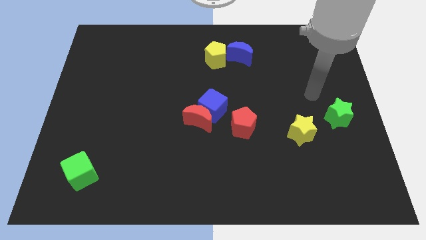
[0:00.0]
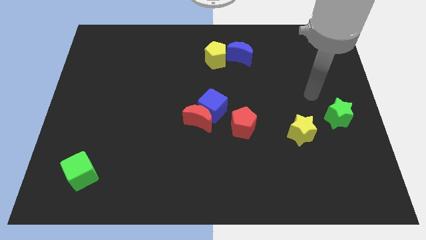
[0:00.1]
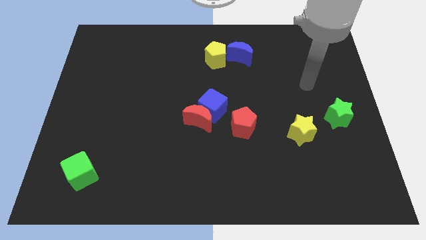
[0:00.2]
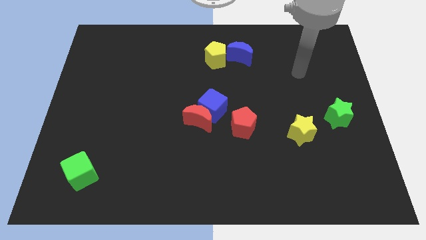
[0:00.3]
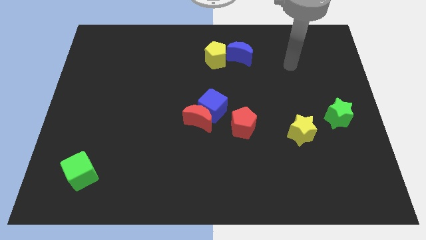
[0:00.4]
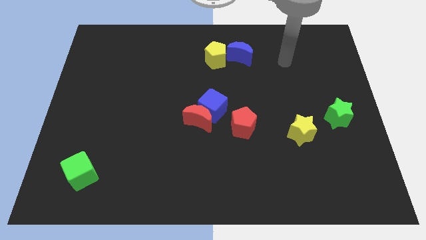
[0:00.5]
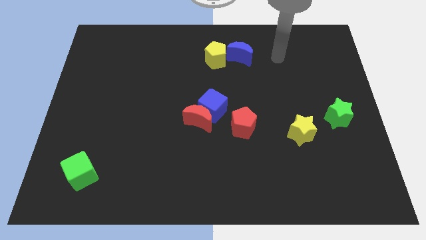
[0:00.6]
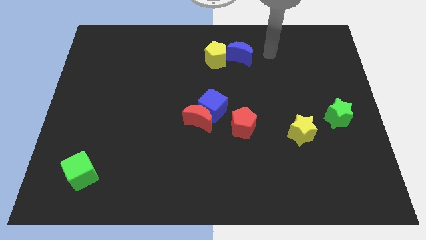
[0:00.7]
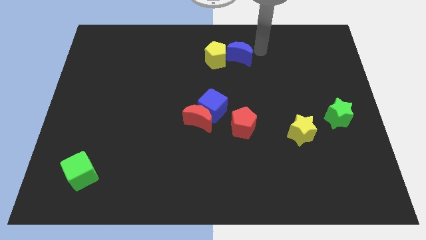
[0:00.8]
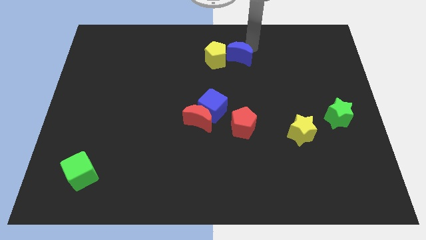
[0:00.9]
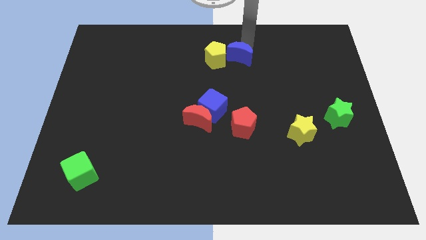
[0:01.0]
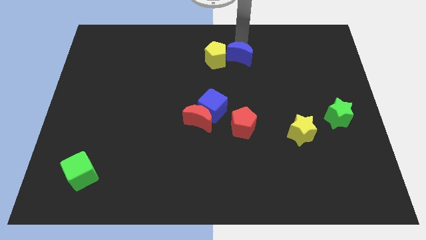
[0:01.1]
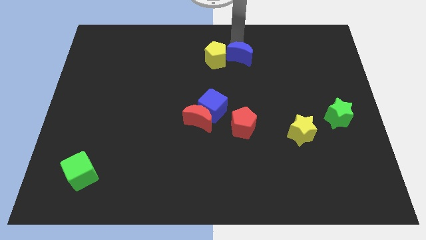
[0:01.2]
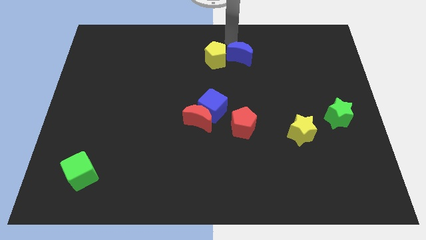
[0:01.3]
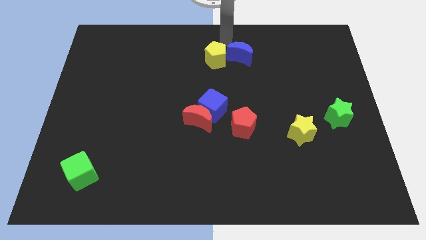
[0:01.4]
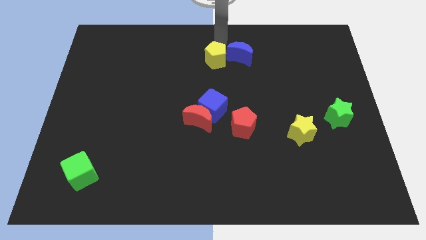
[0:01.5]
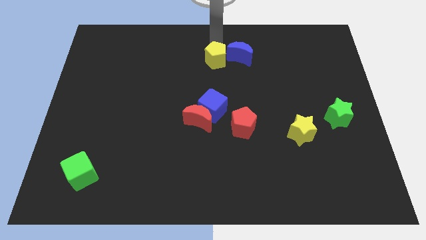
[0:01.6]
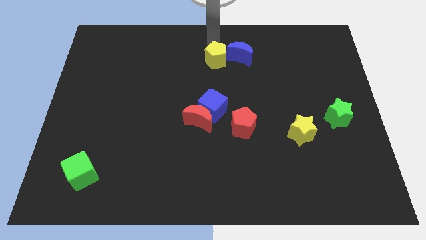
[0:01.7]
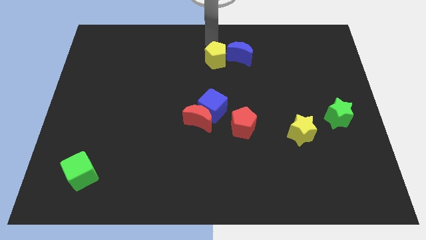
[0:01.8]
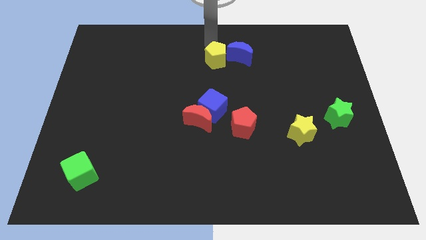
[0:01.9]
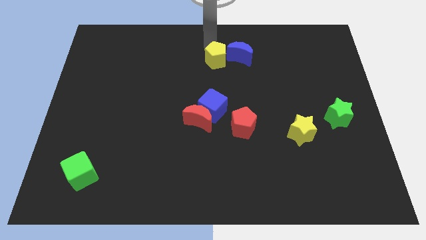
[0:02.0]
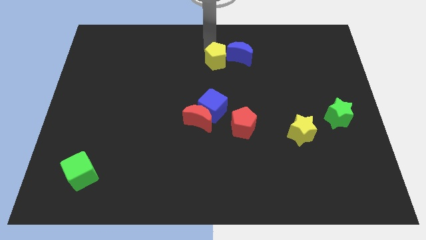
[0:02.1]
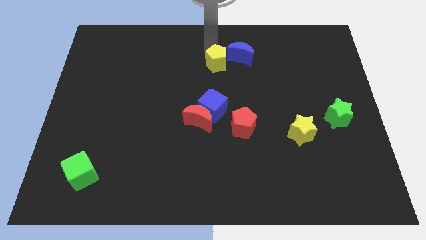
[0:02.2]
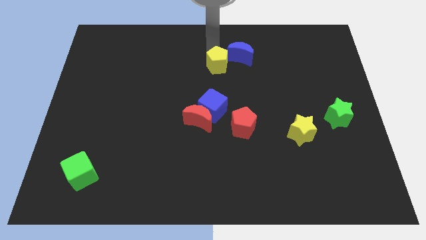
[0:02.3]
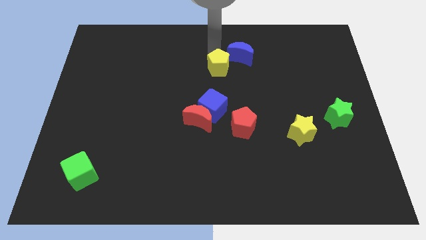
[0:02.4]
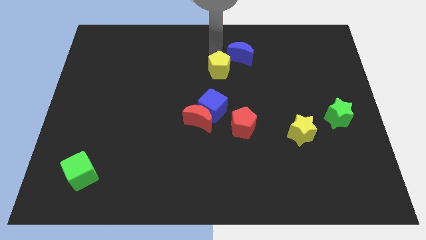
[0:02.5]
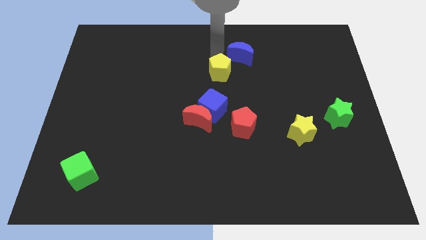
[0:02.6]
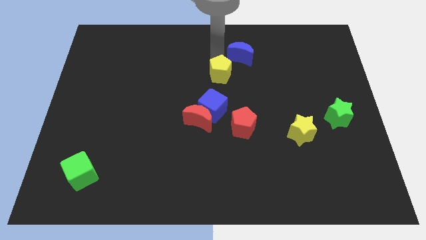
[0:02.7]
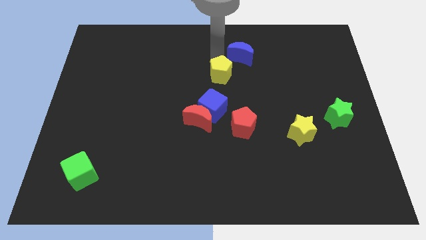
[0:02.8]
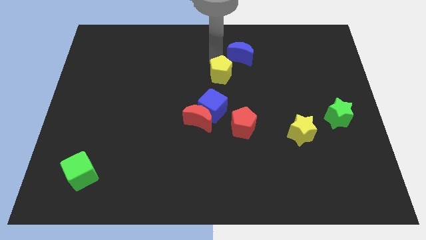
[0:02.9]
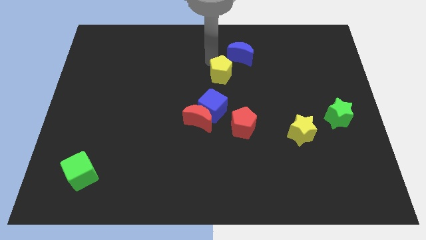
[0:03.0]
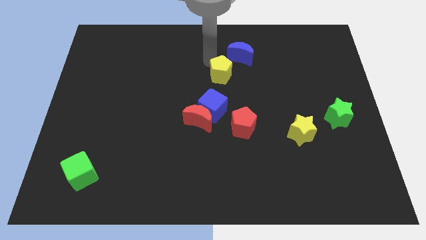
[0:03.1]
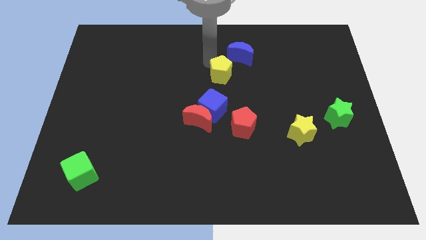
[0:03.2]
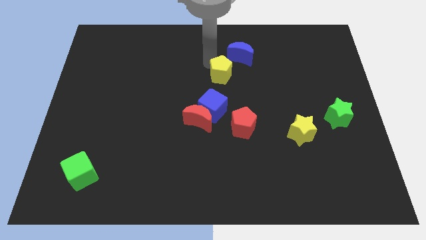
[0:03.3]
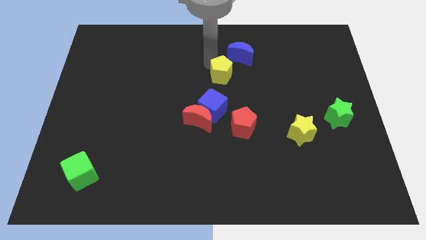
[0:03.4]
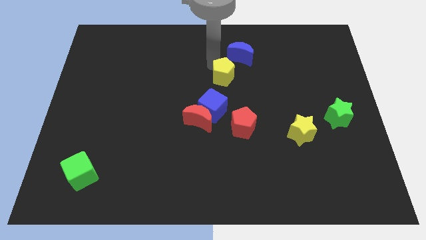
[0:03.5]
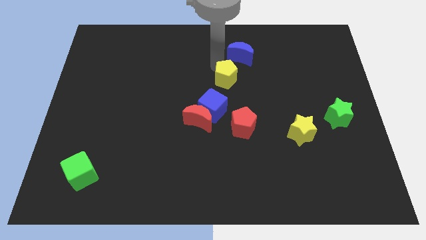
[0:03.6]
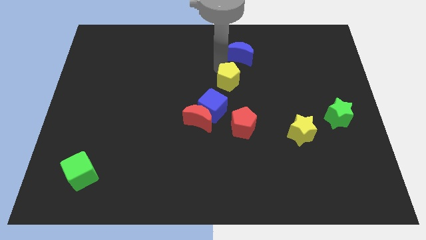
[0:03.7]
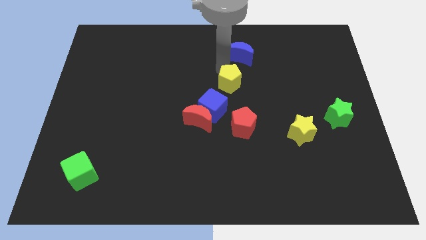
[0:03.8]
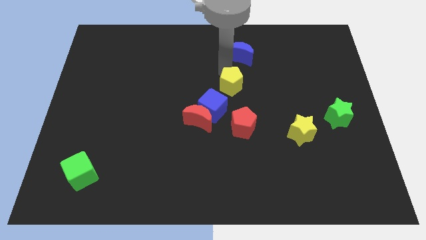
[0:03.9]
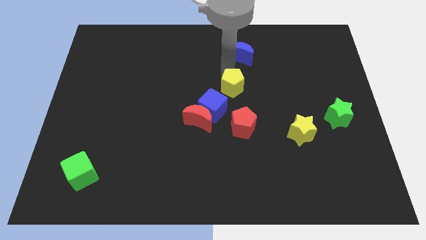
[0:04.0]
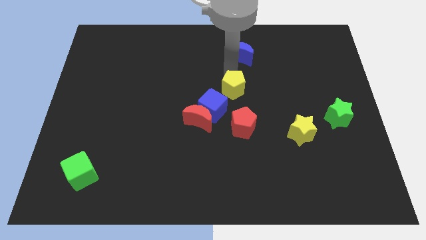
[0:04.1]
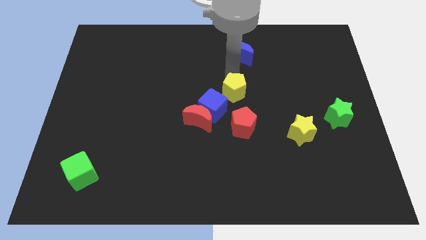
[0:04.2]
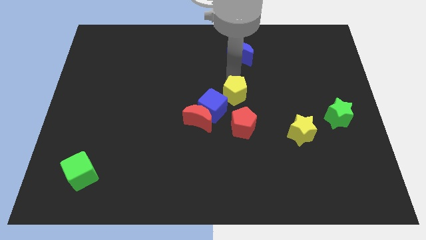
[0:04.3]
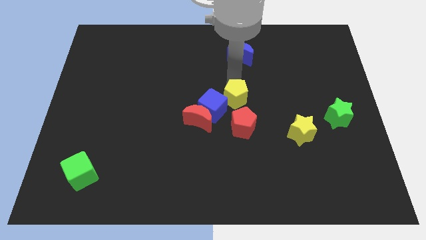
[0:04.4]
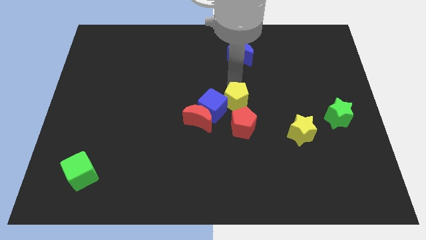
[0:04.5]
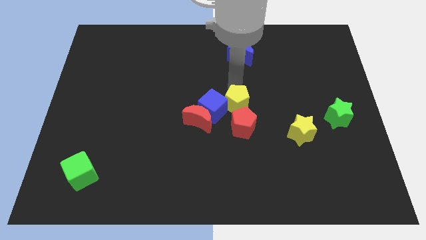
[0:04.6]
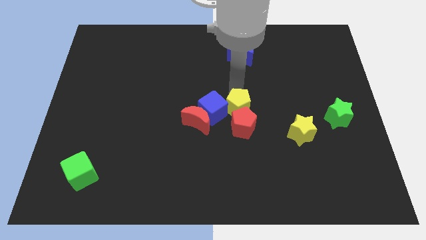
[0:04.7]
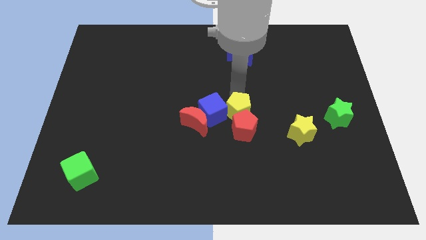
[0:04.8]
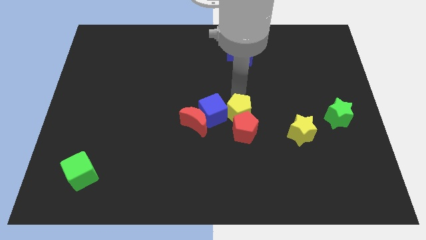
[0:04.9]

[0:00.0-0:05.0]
move the yellow pentagon to the red pentagon

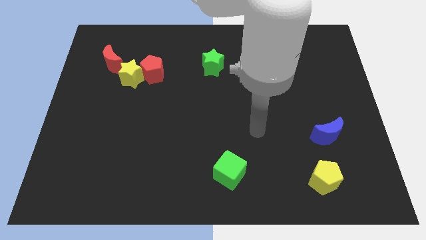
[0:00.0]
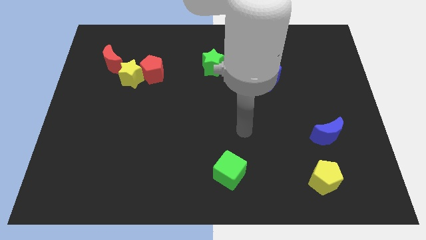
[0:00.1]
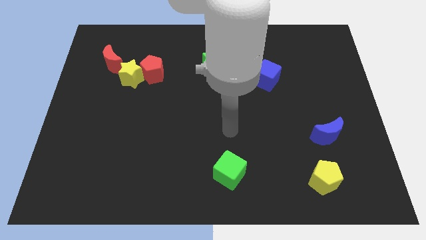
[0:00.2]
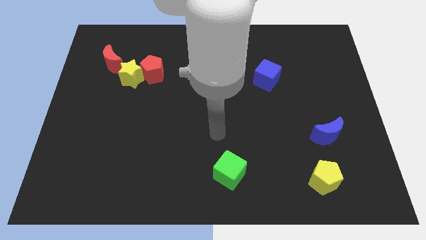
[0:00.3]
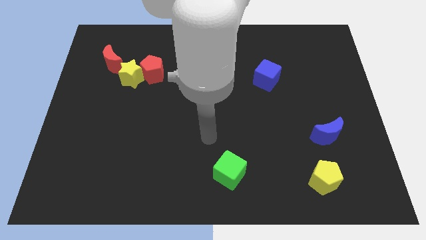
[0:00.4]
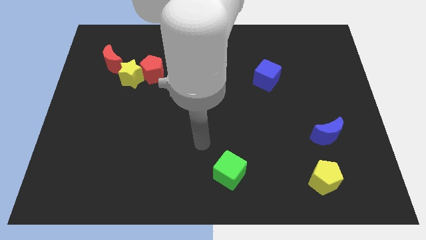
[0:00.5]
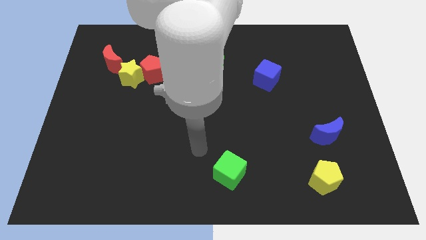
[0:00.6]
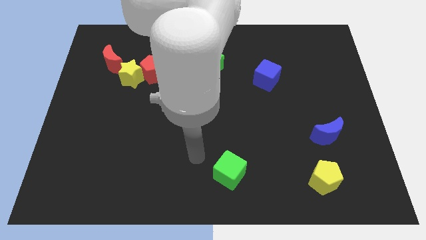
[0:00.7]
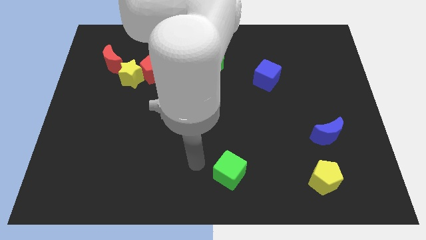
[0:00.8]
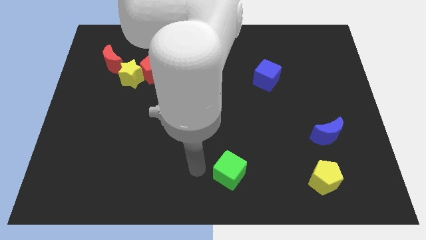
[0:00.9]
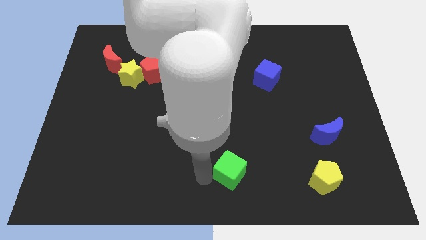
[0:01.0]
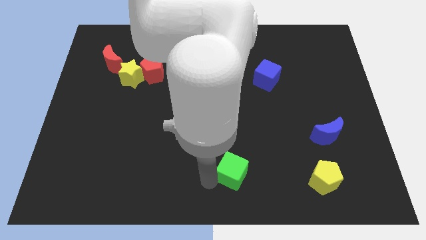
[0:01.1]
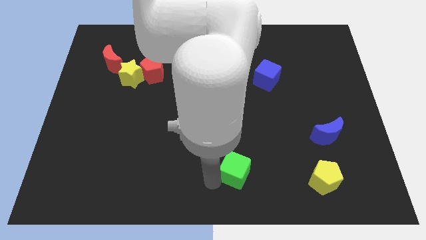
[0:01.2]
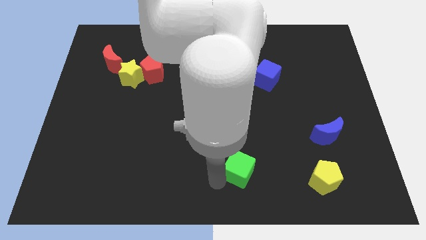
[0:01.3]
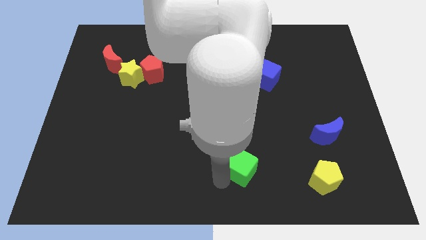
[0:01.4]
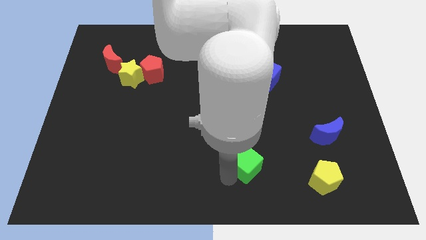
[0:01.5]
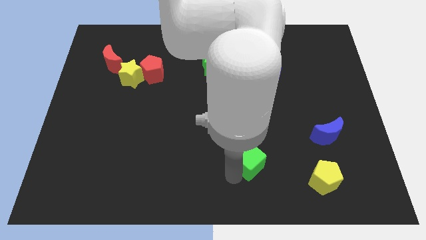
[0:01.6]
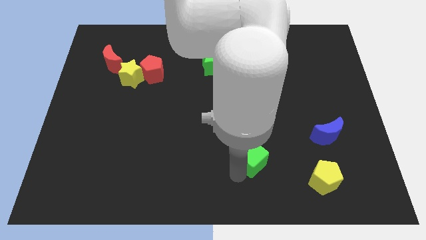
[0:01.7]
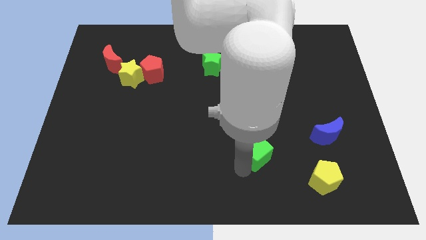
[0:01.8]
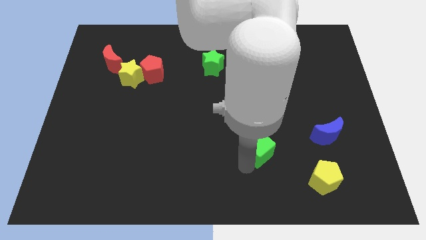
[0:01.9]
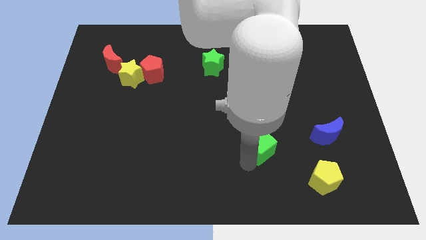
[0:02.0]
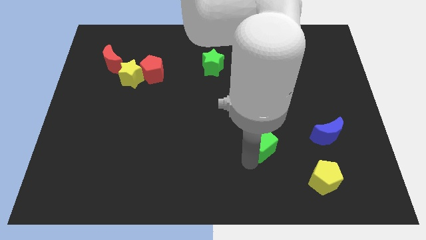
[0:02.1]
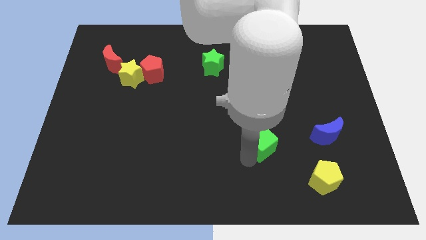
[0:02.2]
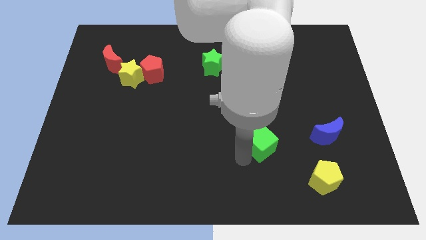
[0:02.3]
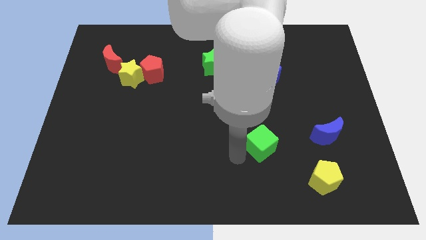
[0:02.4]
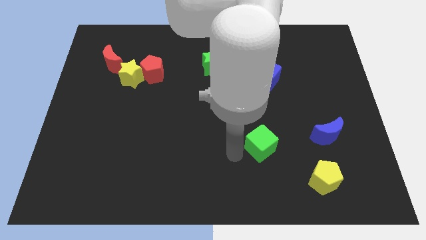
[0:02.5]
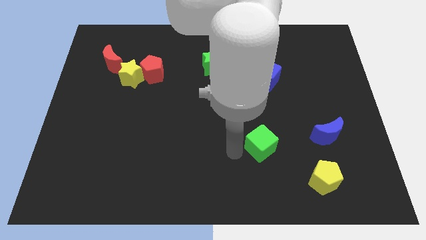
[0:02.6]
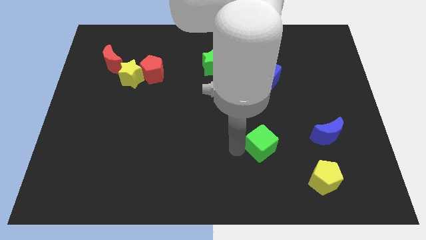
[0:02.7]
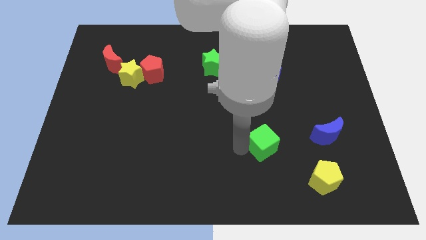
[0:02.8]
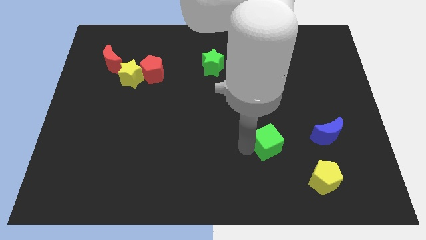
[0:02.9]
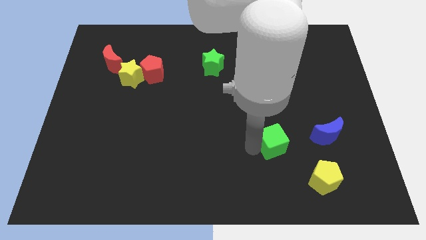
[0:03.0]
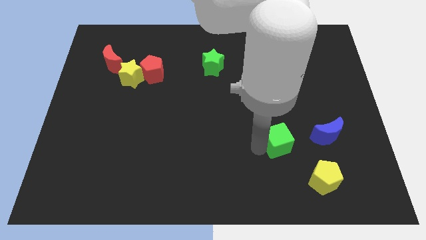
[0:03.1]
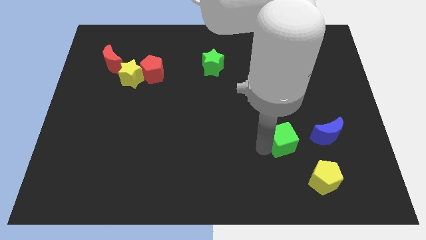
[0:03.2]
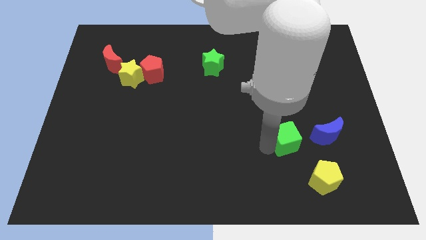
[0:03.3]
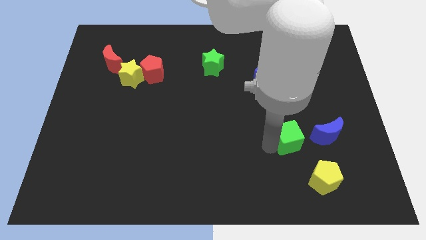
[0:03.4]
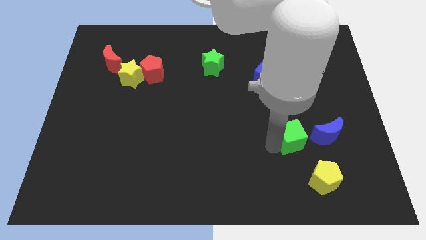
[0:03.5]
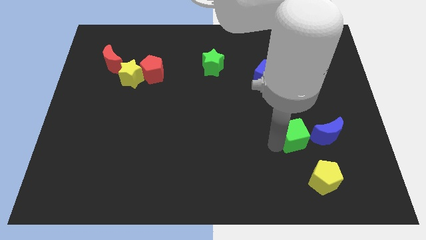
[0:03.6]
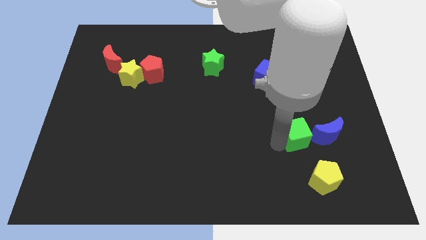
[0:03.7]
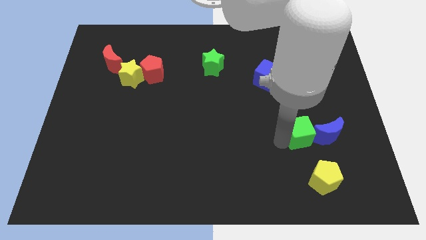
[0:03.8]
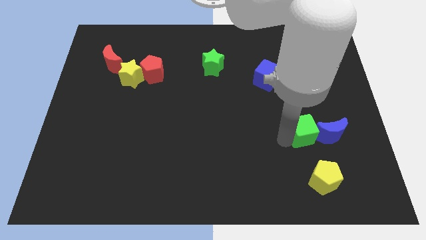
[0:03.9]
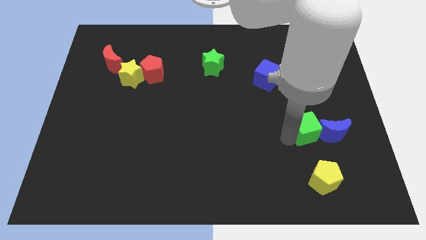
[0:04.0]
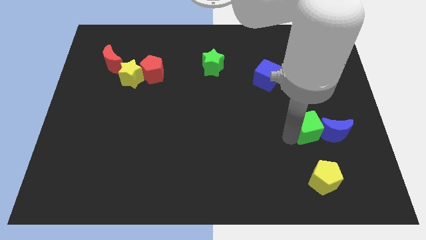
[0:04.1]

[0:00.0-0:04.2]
move the green cube towards the blue moon
